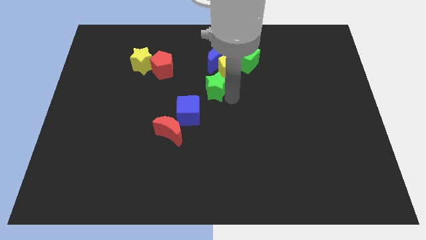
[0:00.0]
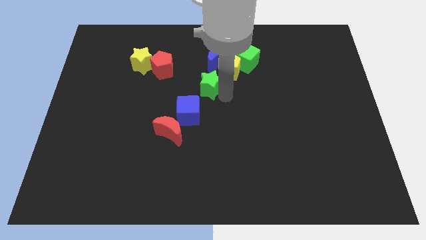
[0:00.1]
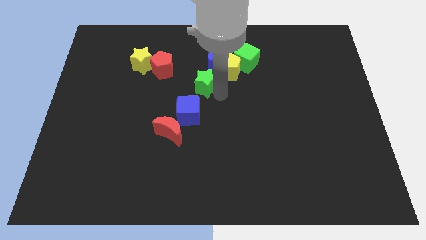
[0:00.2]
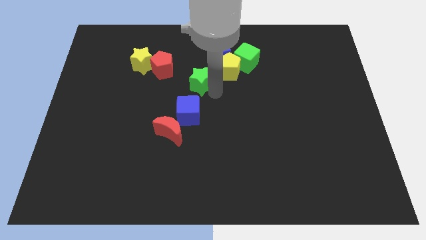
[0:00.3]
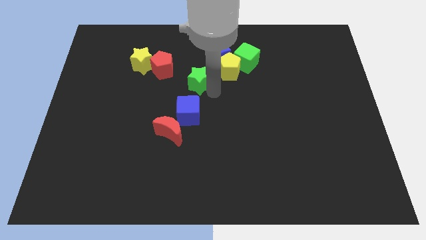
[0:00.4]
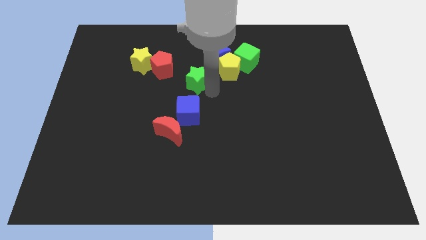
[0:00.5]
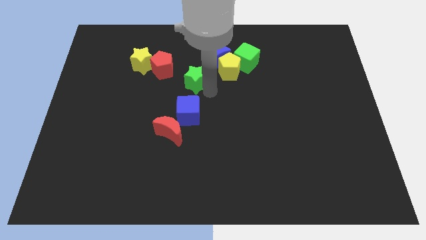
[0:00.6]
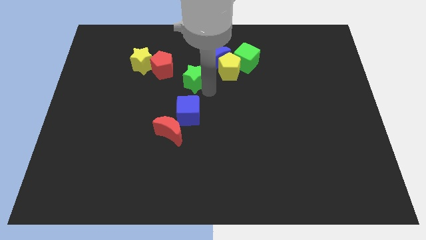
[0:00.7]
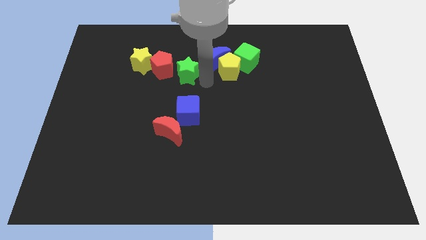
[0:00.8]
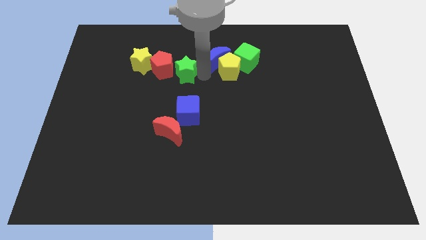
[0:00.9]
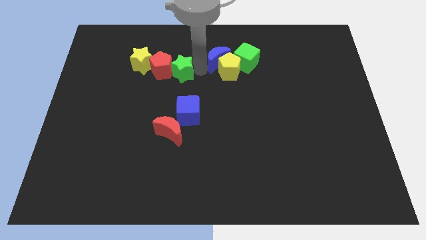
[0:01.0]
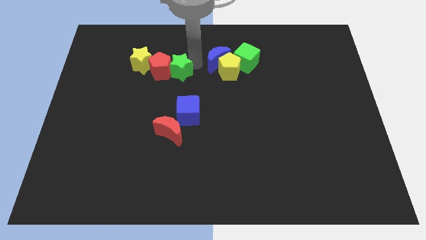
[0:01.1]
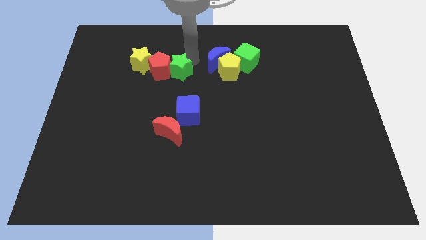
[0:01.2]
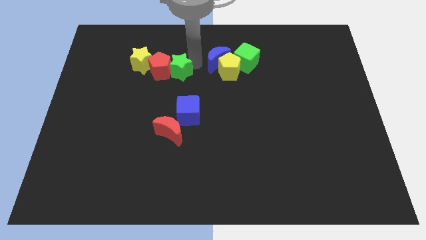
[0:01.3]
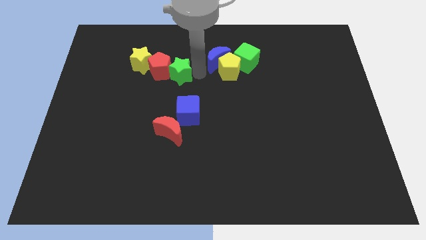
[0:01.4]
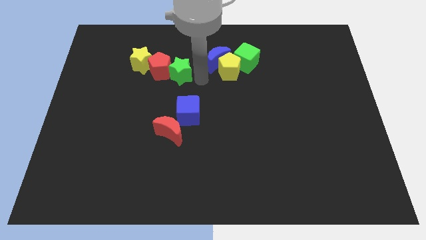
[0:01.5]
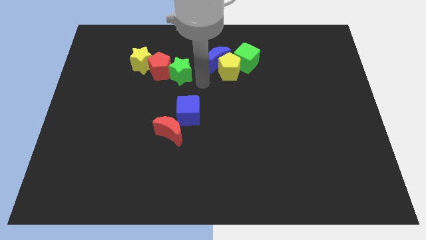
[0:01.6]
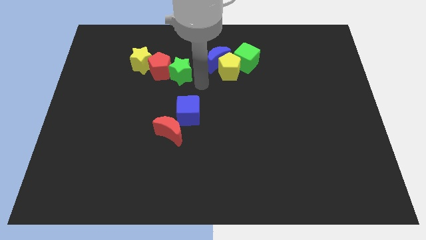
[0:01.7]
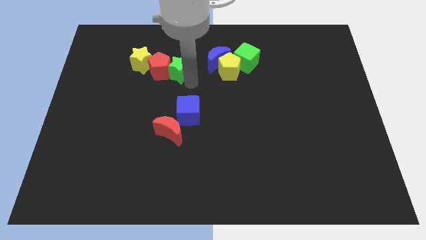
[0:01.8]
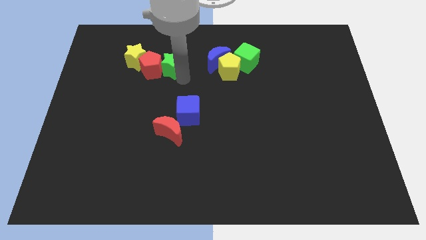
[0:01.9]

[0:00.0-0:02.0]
move the green star to the right of the red pentagon

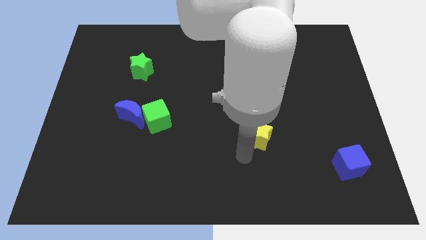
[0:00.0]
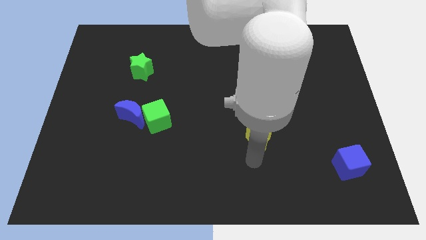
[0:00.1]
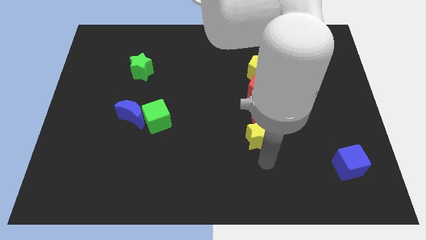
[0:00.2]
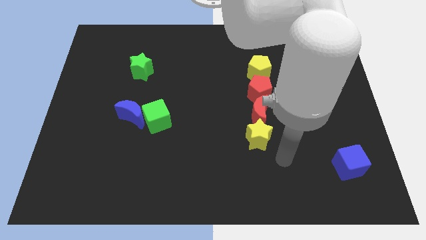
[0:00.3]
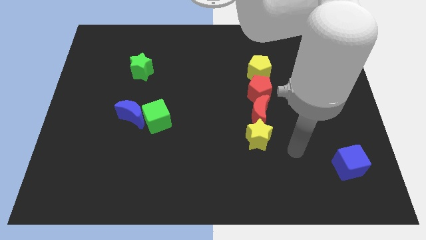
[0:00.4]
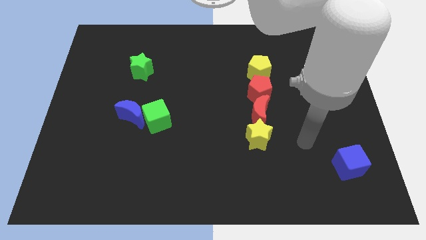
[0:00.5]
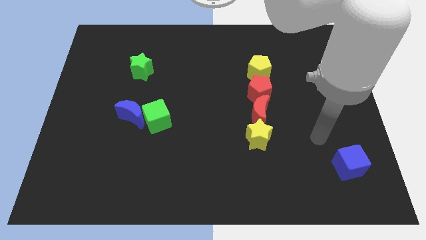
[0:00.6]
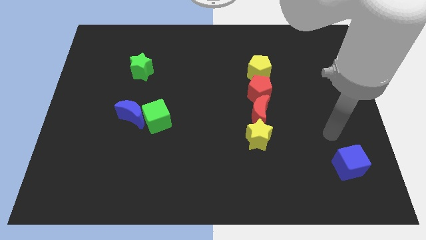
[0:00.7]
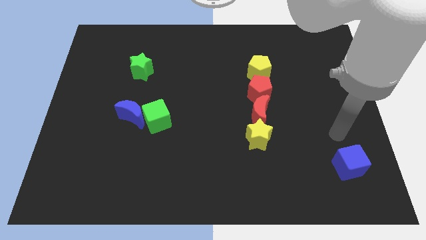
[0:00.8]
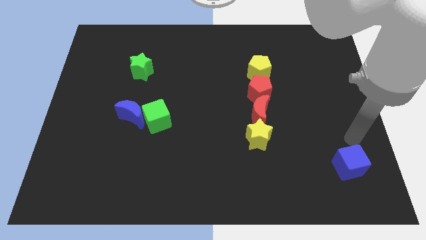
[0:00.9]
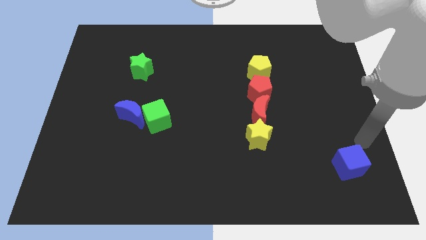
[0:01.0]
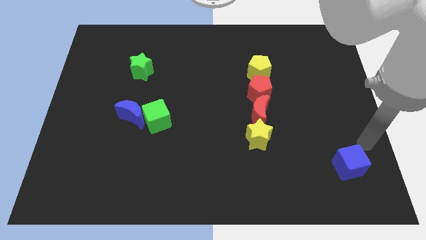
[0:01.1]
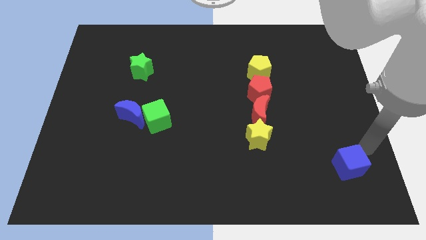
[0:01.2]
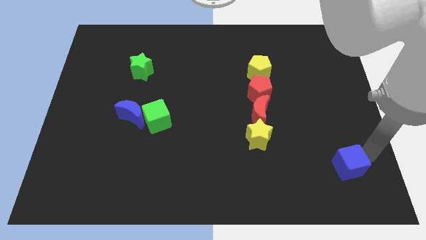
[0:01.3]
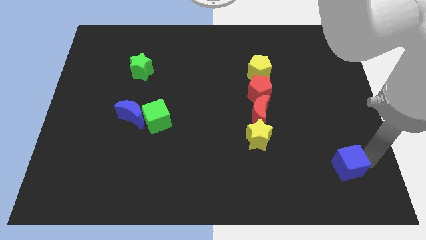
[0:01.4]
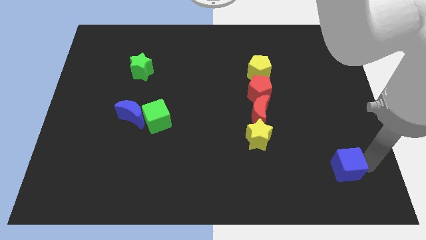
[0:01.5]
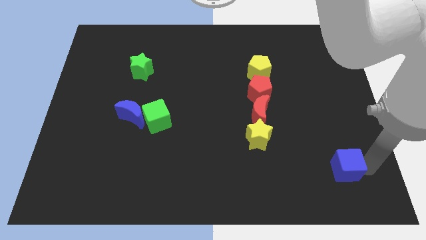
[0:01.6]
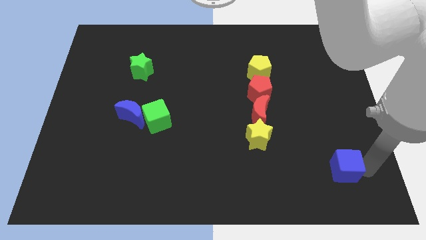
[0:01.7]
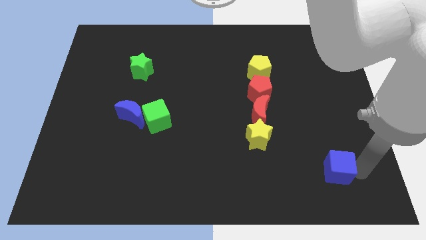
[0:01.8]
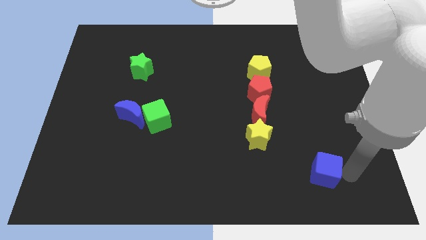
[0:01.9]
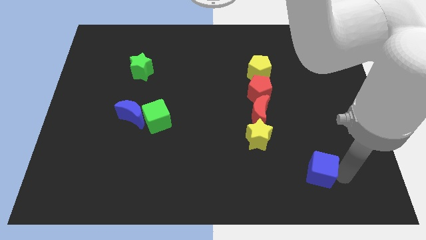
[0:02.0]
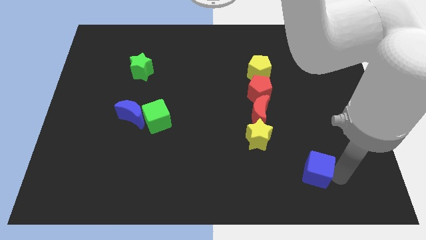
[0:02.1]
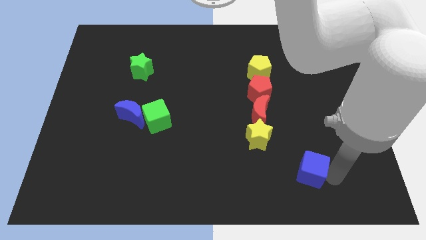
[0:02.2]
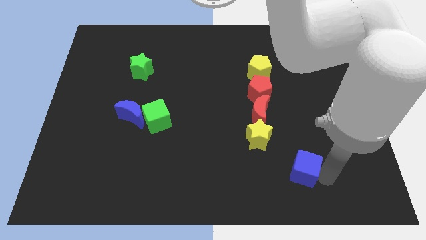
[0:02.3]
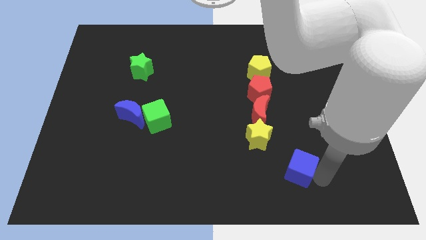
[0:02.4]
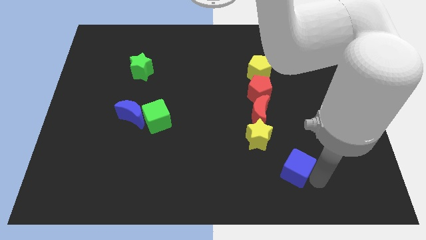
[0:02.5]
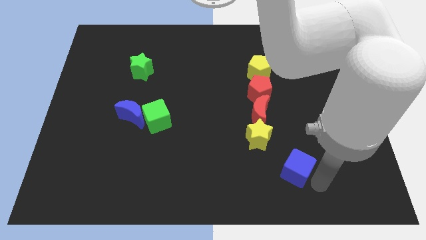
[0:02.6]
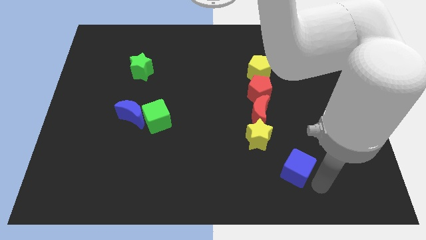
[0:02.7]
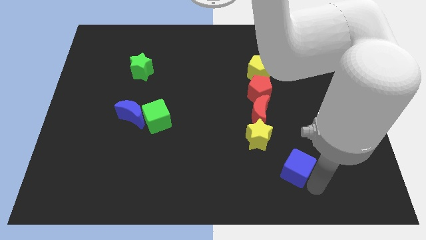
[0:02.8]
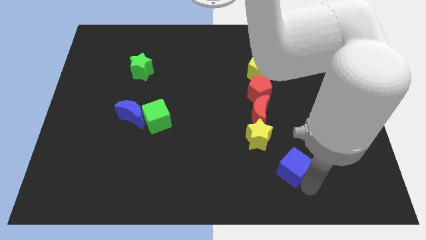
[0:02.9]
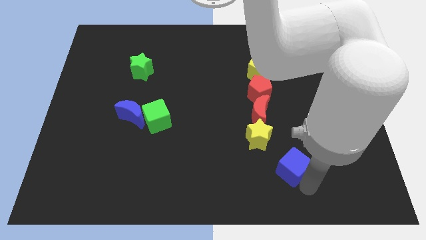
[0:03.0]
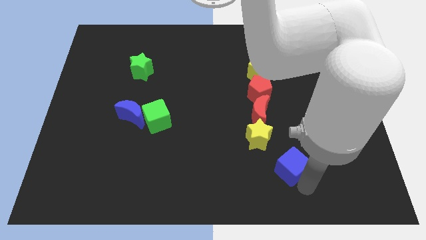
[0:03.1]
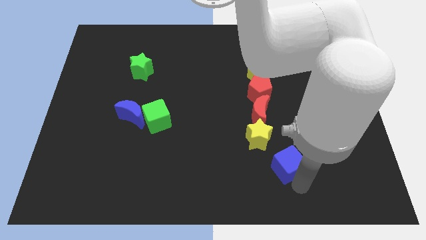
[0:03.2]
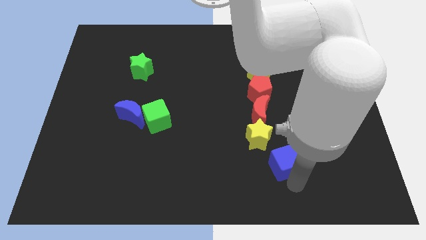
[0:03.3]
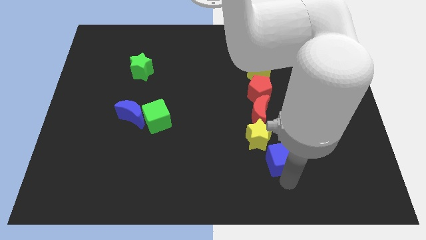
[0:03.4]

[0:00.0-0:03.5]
place the blue cube at the bottom right side of yellow star

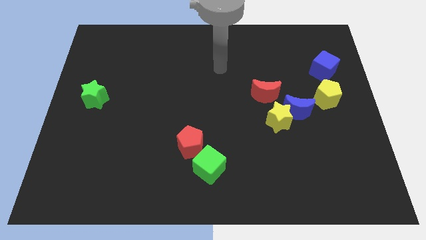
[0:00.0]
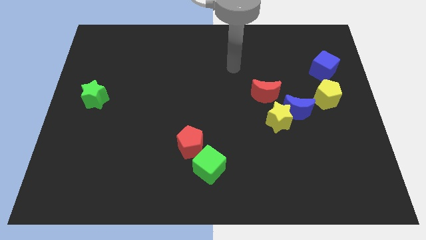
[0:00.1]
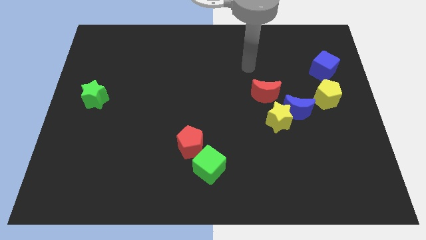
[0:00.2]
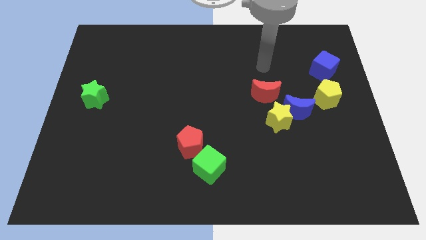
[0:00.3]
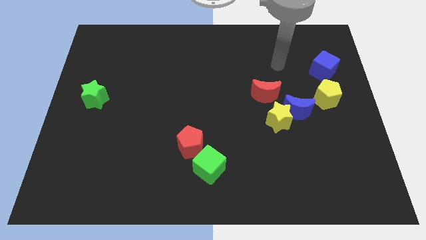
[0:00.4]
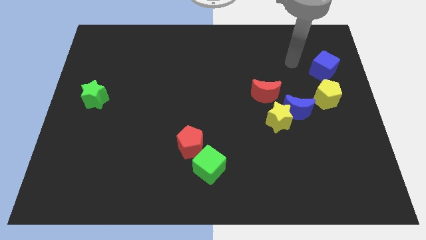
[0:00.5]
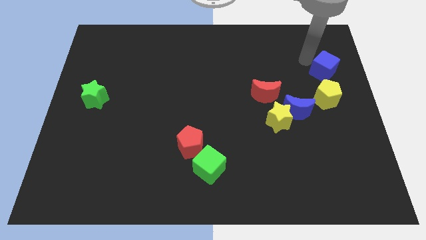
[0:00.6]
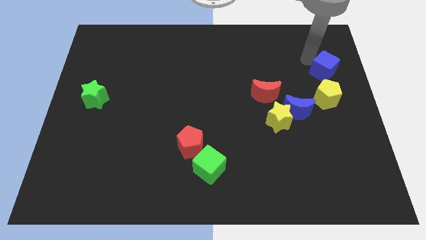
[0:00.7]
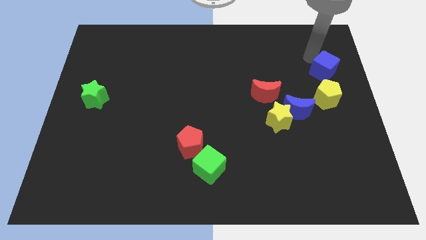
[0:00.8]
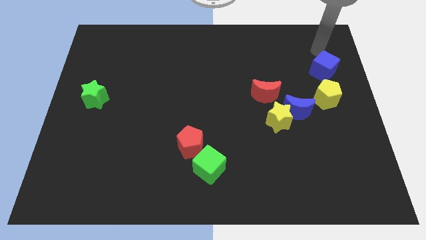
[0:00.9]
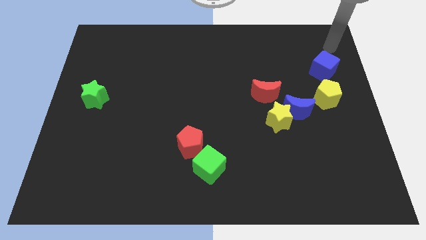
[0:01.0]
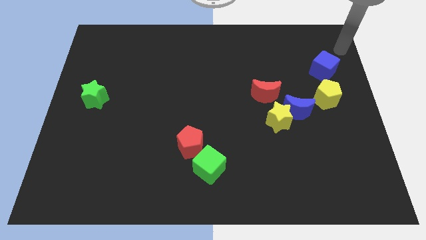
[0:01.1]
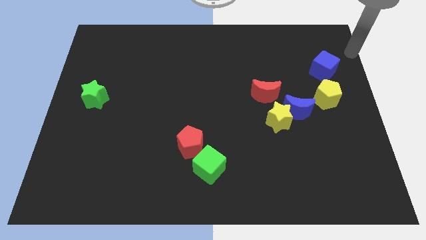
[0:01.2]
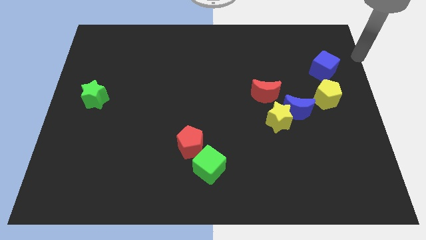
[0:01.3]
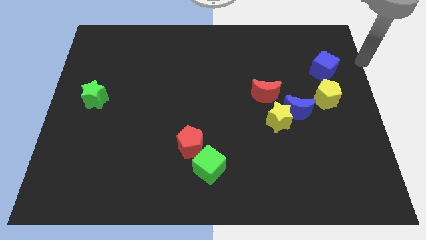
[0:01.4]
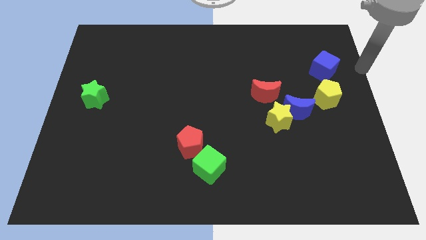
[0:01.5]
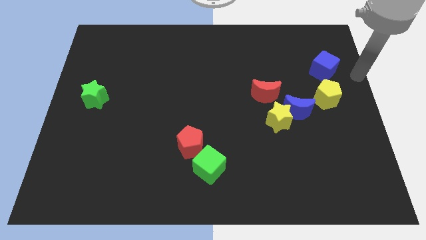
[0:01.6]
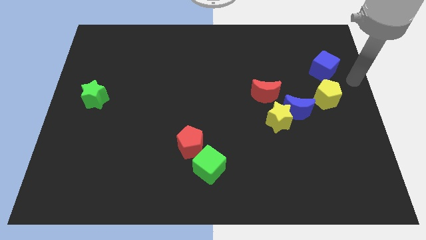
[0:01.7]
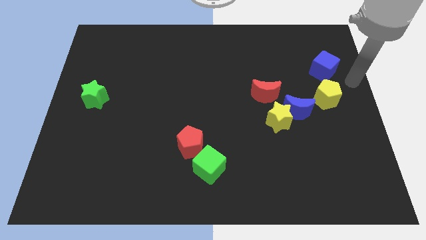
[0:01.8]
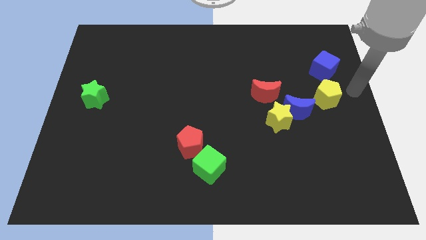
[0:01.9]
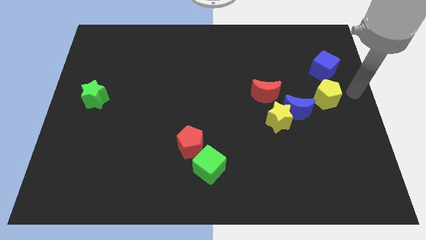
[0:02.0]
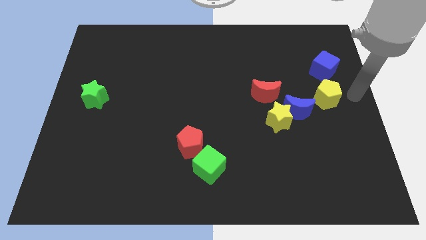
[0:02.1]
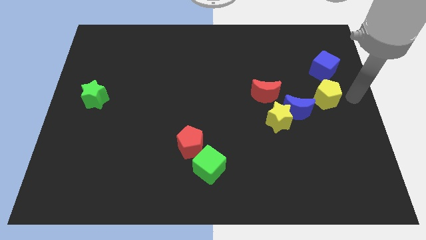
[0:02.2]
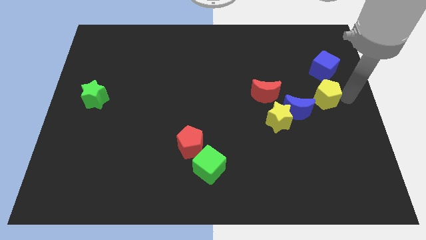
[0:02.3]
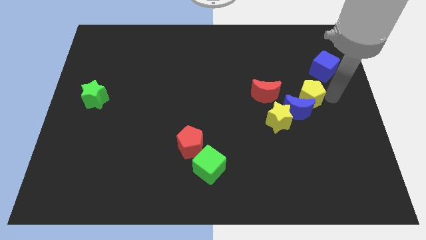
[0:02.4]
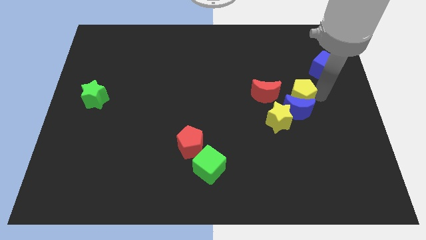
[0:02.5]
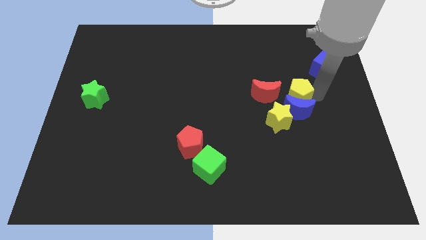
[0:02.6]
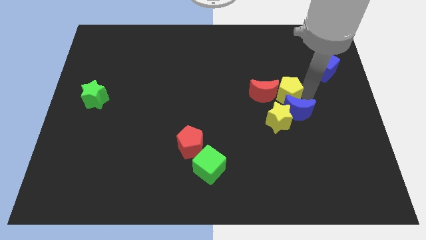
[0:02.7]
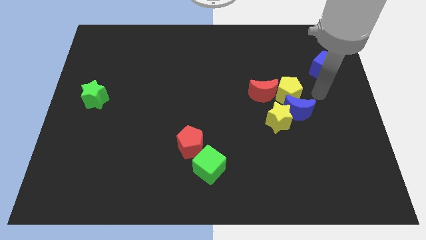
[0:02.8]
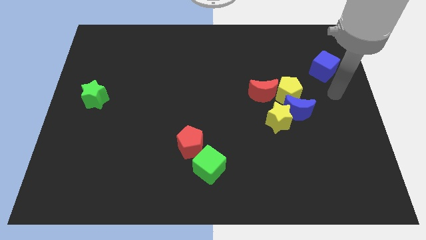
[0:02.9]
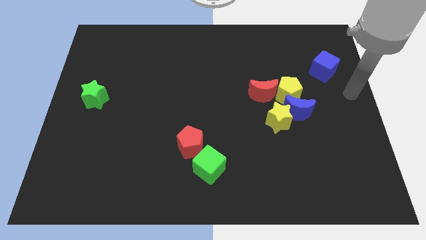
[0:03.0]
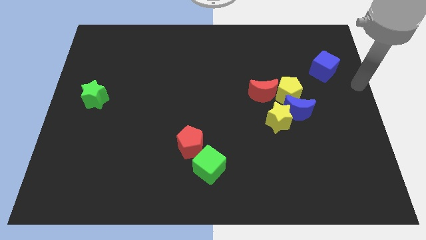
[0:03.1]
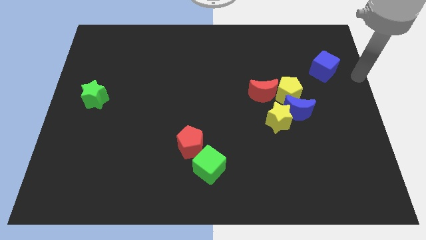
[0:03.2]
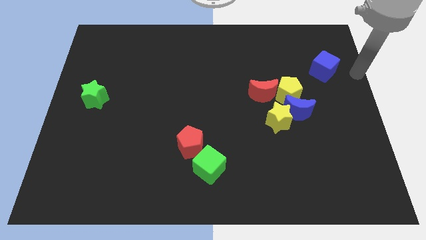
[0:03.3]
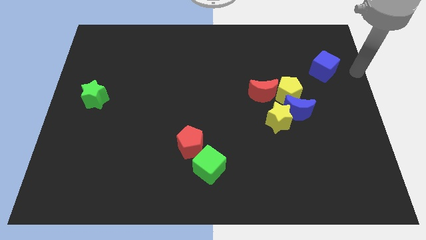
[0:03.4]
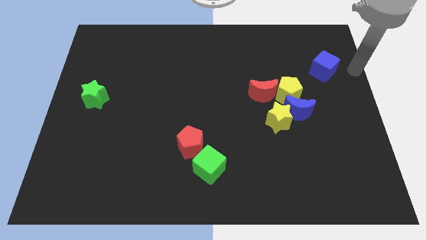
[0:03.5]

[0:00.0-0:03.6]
push the yellow pentagon to the right of the red crescent
